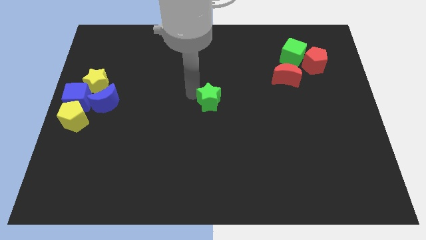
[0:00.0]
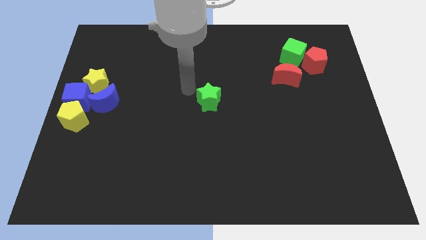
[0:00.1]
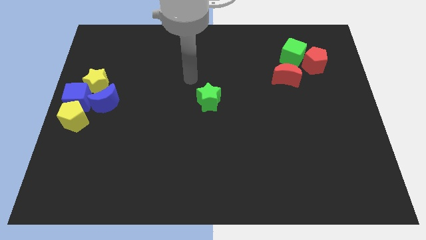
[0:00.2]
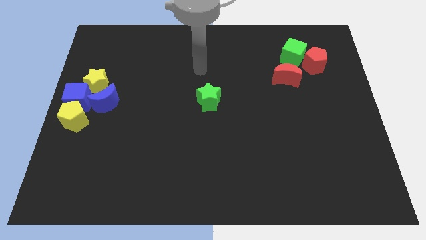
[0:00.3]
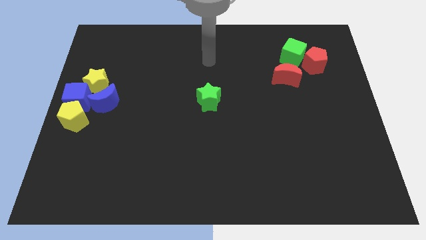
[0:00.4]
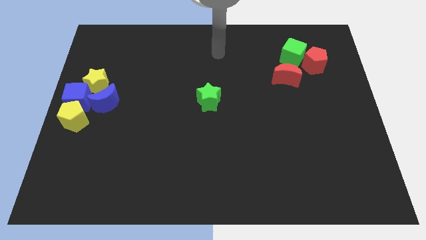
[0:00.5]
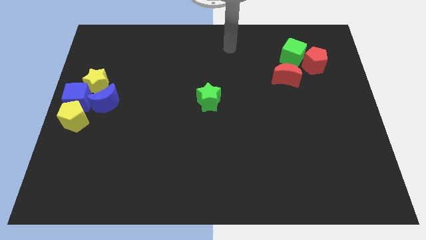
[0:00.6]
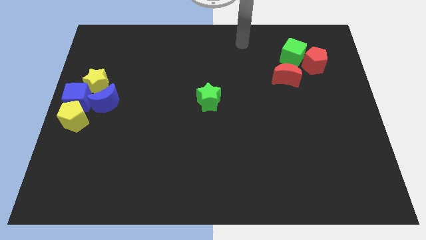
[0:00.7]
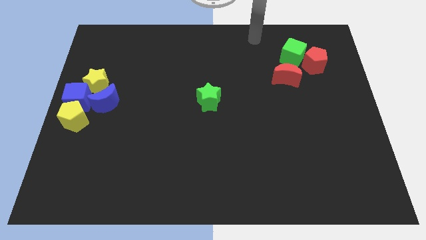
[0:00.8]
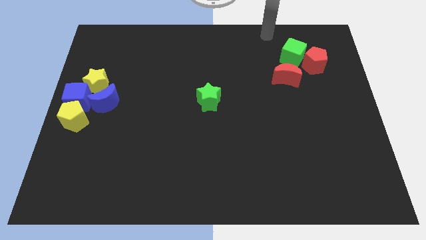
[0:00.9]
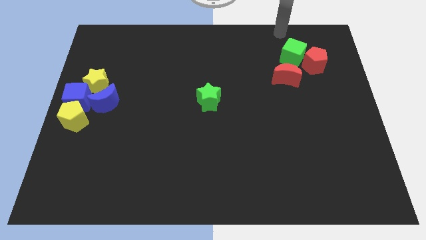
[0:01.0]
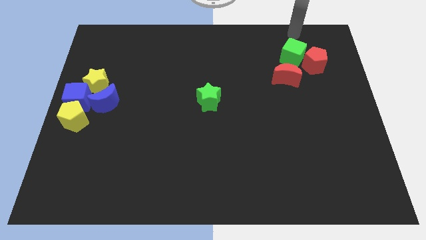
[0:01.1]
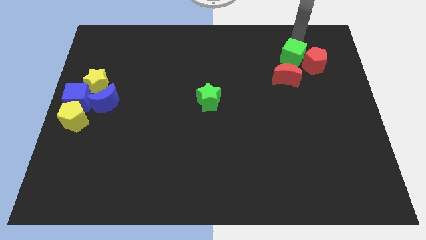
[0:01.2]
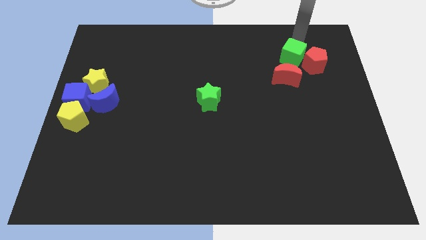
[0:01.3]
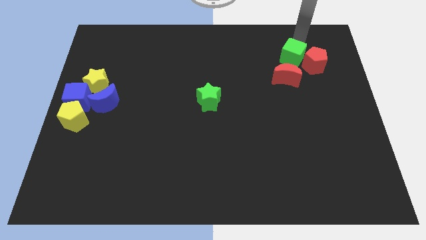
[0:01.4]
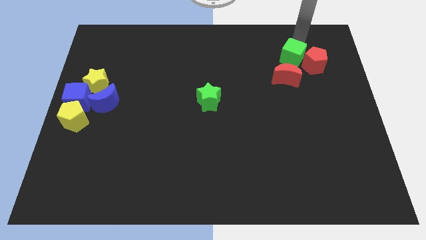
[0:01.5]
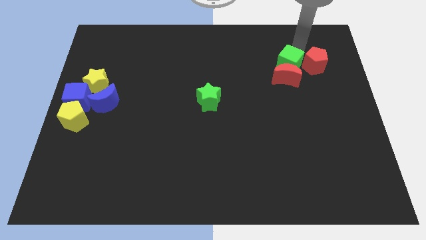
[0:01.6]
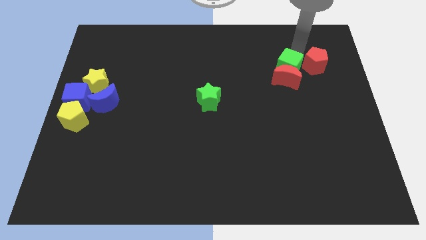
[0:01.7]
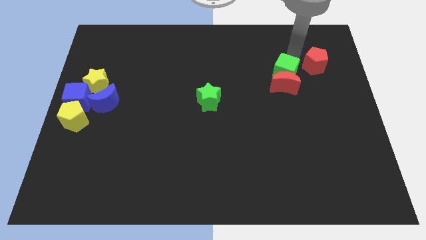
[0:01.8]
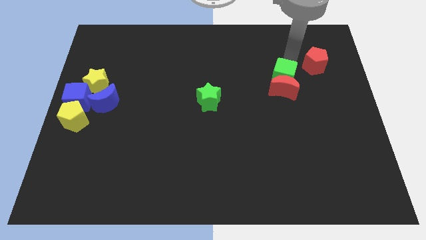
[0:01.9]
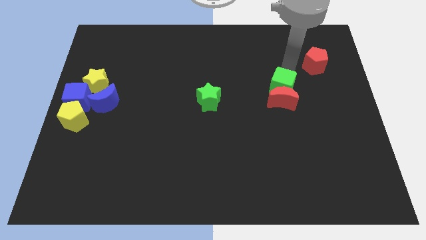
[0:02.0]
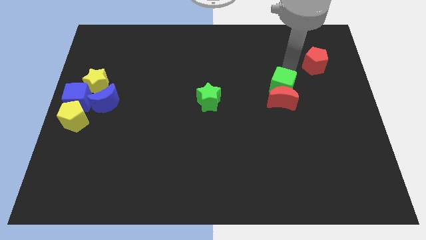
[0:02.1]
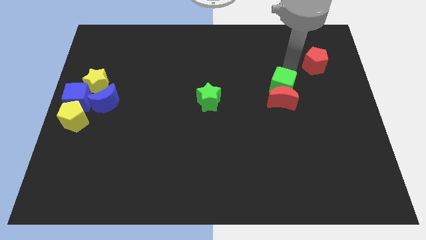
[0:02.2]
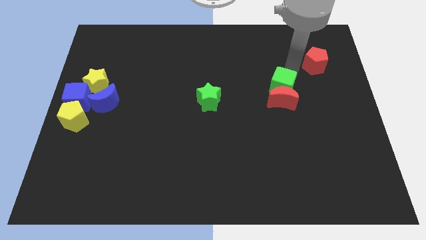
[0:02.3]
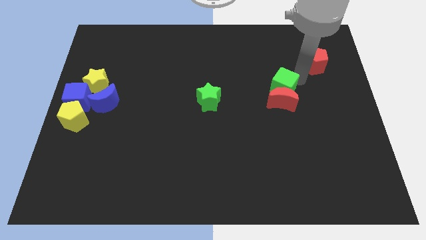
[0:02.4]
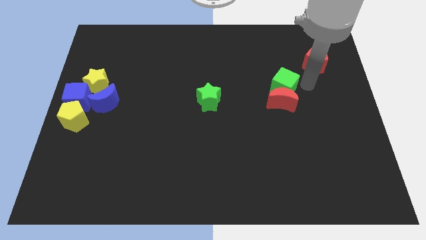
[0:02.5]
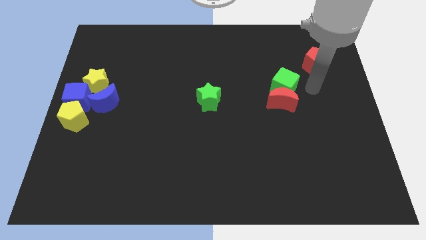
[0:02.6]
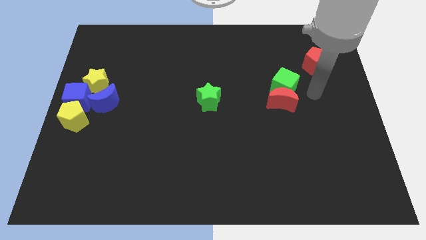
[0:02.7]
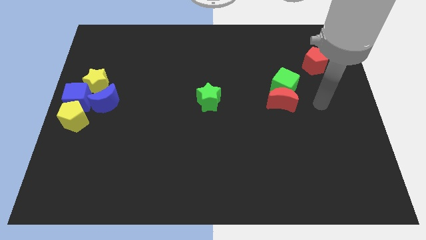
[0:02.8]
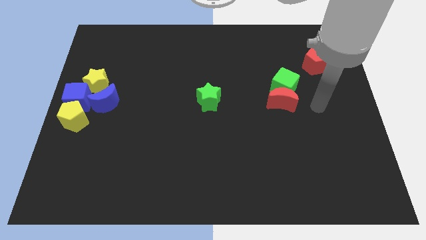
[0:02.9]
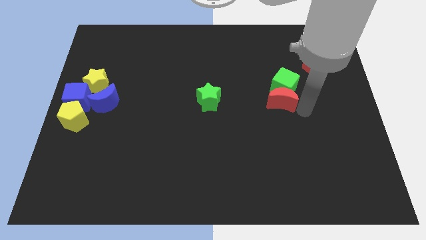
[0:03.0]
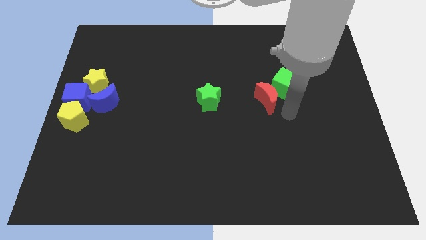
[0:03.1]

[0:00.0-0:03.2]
push the green cube and red moon towards the bottom side of the board

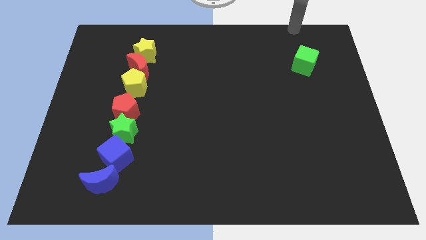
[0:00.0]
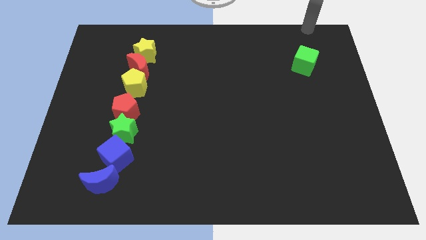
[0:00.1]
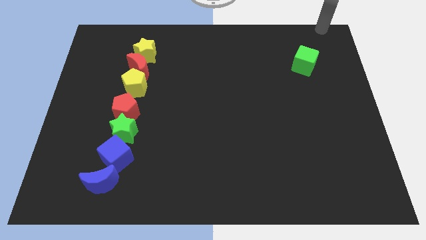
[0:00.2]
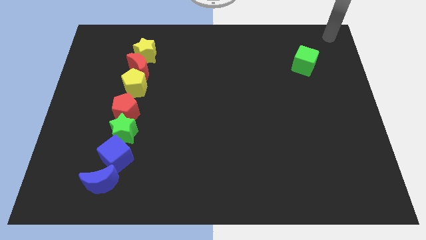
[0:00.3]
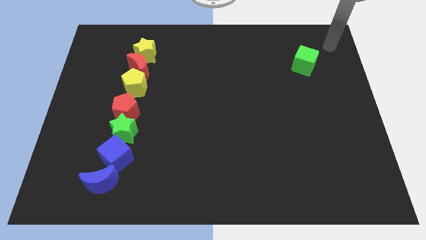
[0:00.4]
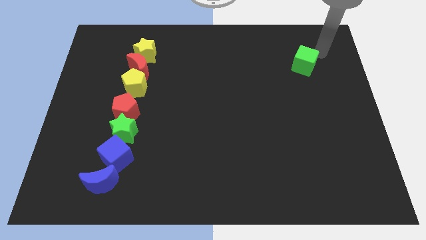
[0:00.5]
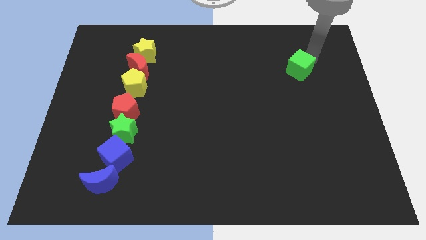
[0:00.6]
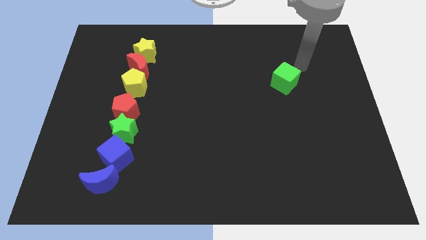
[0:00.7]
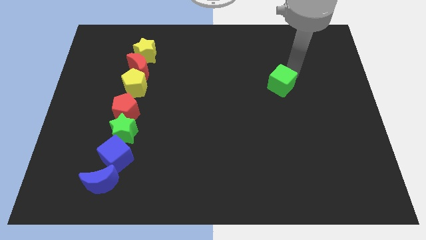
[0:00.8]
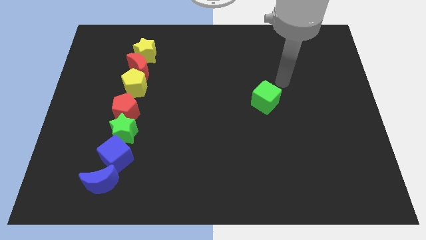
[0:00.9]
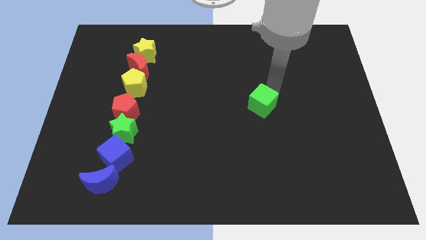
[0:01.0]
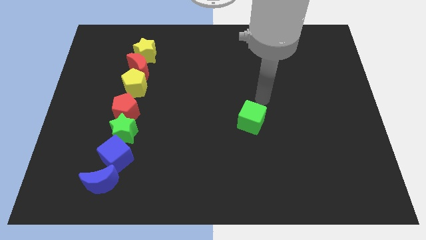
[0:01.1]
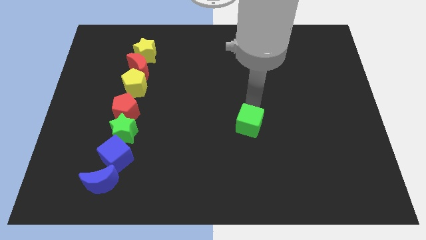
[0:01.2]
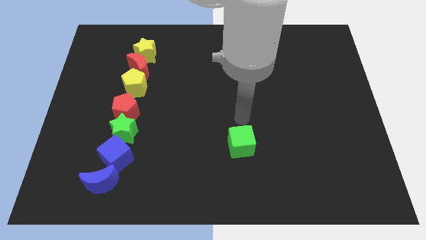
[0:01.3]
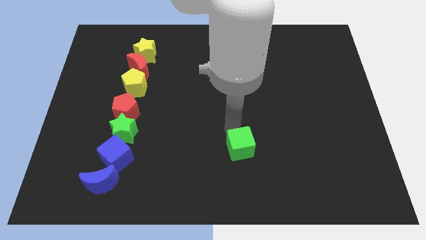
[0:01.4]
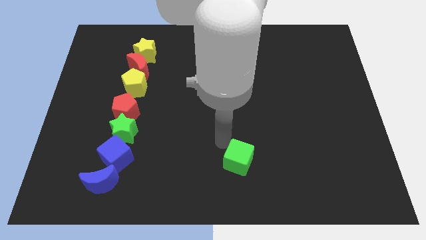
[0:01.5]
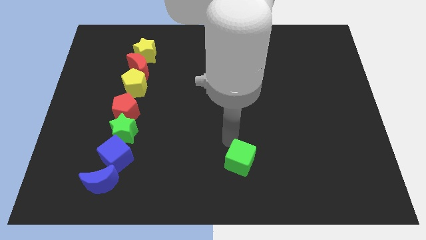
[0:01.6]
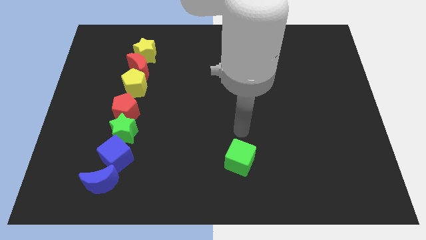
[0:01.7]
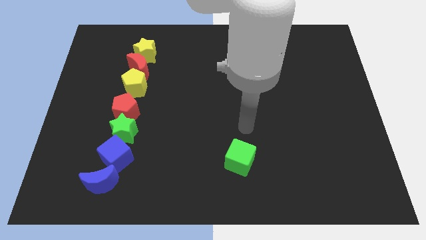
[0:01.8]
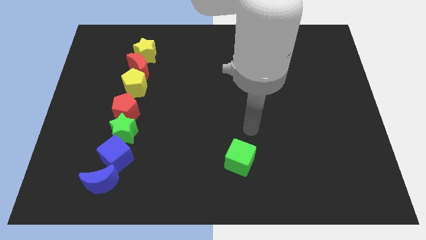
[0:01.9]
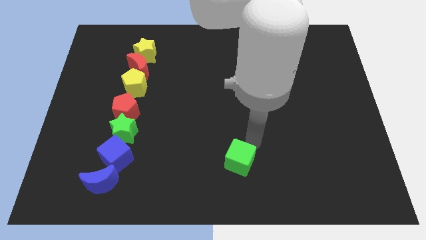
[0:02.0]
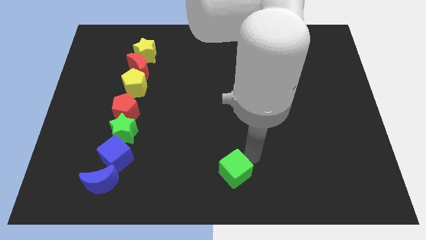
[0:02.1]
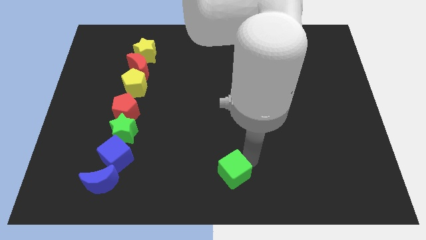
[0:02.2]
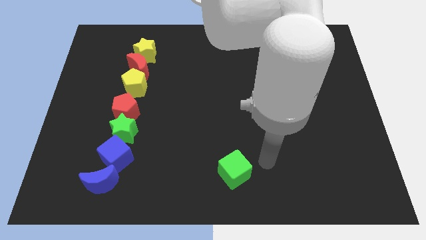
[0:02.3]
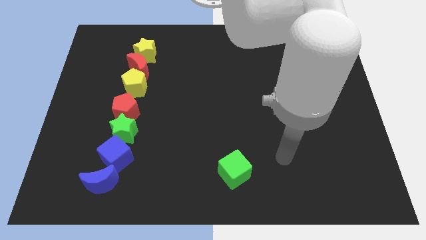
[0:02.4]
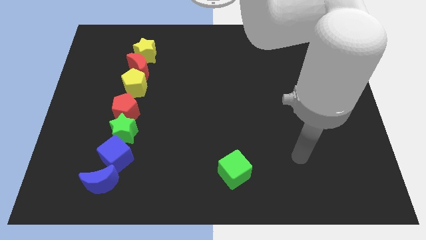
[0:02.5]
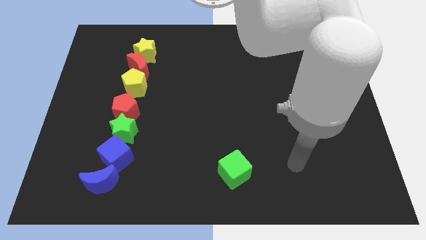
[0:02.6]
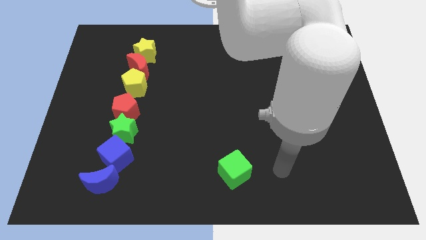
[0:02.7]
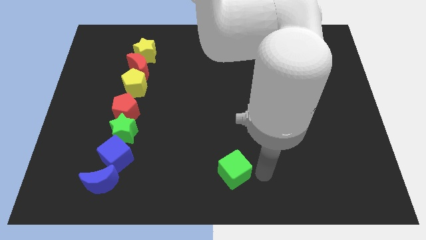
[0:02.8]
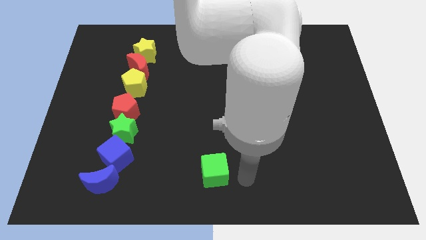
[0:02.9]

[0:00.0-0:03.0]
push the green cube to the right of the blue crescent

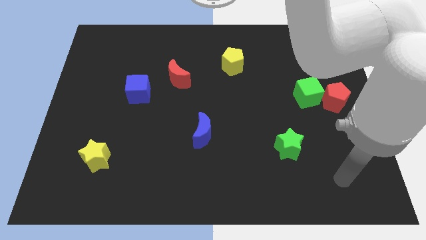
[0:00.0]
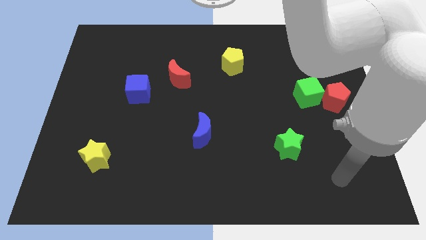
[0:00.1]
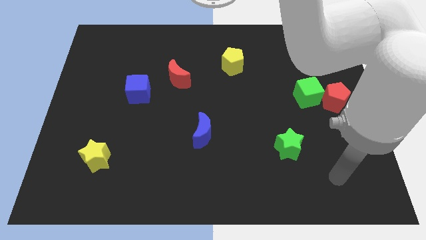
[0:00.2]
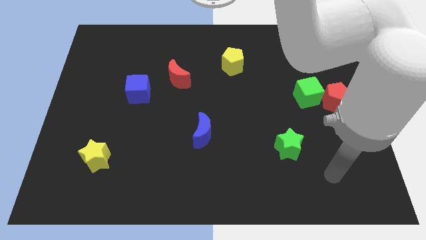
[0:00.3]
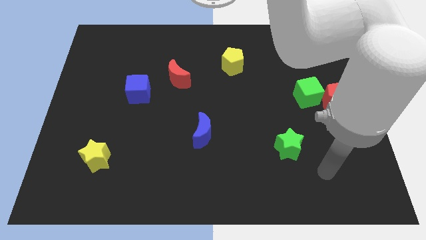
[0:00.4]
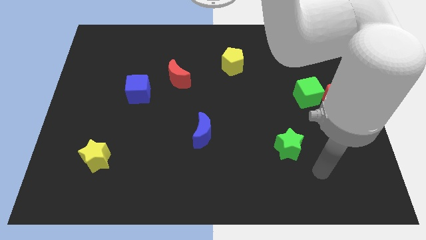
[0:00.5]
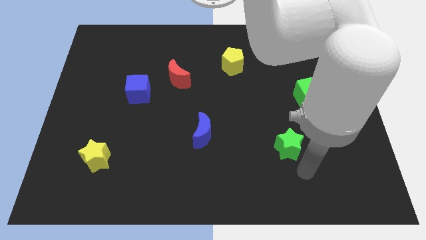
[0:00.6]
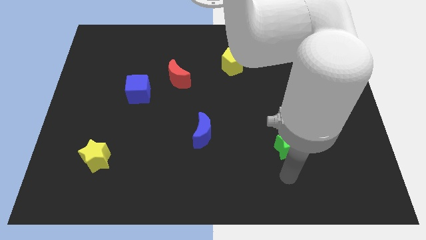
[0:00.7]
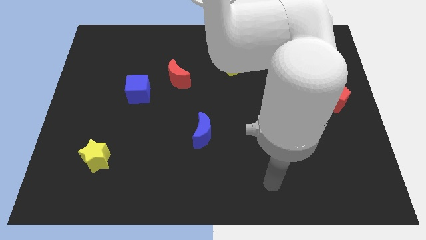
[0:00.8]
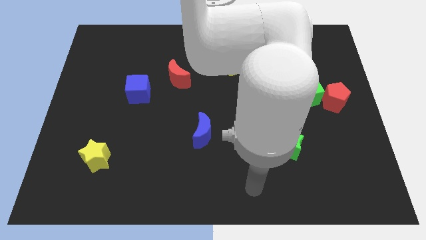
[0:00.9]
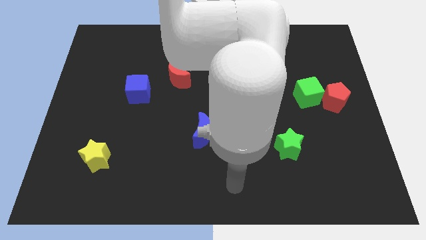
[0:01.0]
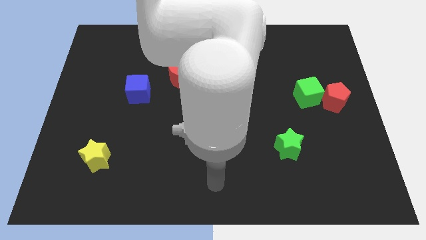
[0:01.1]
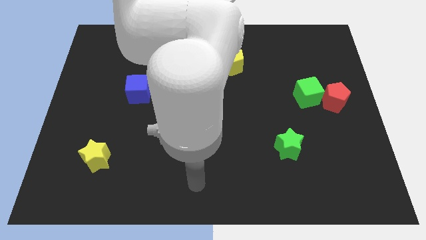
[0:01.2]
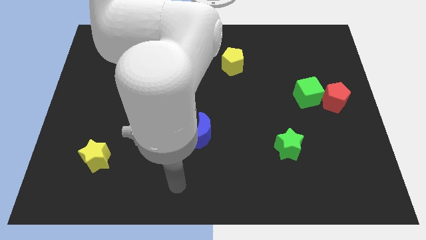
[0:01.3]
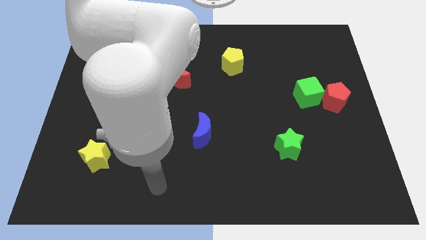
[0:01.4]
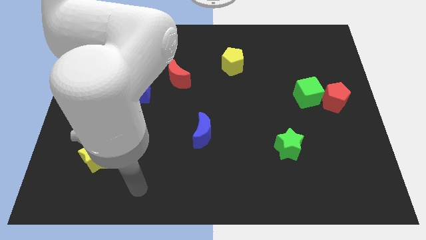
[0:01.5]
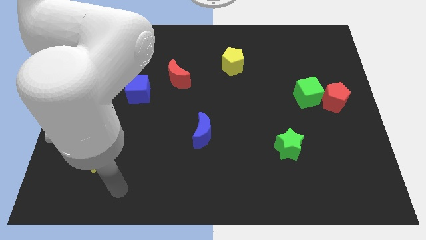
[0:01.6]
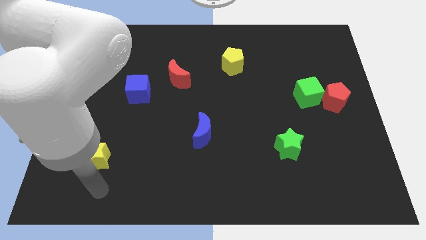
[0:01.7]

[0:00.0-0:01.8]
move your arm towards the left side of the board

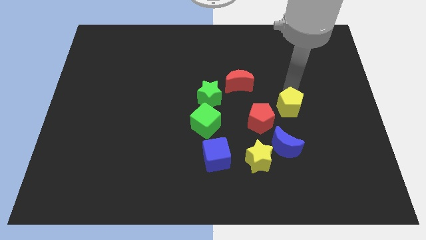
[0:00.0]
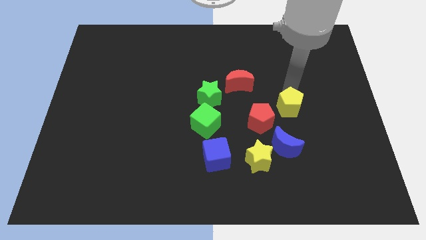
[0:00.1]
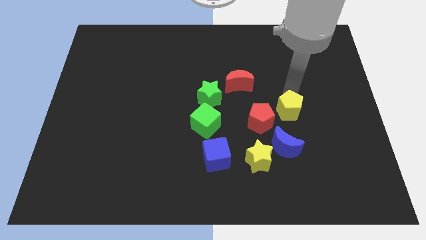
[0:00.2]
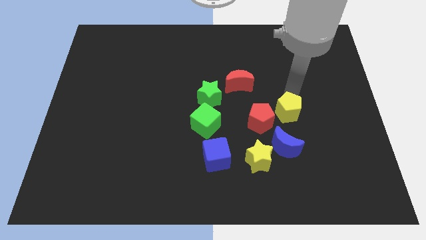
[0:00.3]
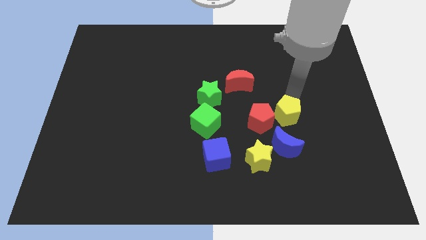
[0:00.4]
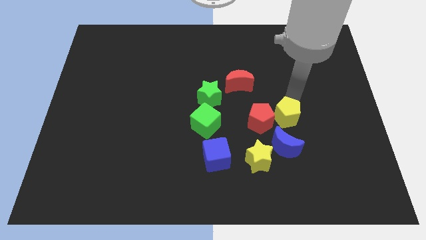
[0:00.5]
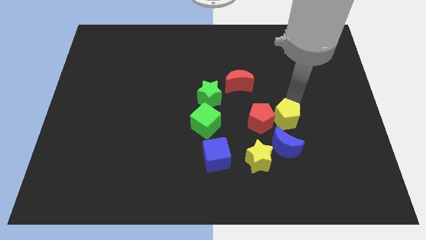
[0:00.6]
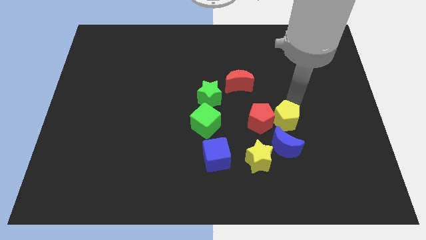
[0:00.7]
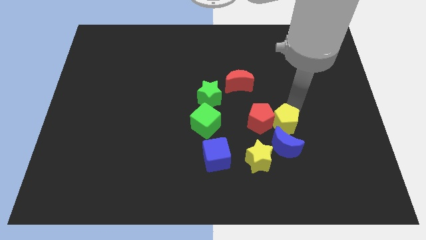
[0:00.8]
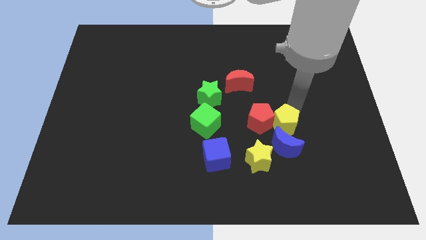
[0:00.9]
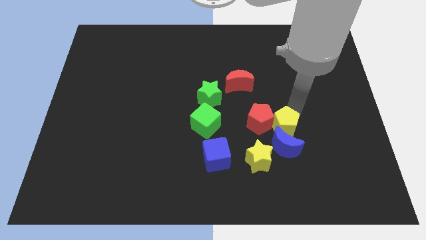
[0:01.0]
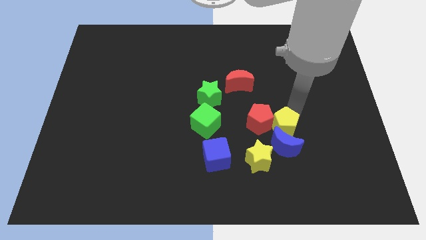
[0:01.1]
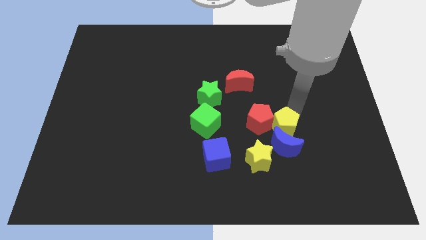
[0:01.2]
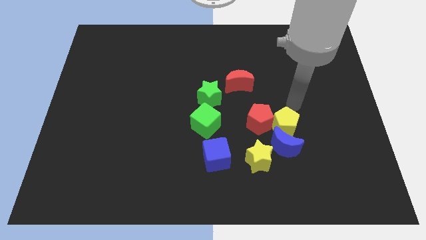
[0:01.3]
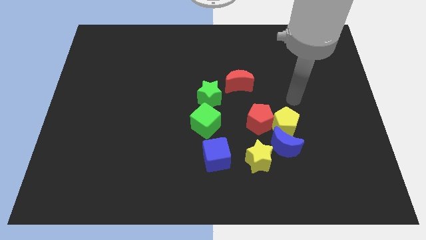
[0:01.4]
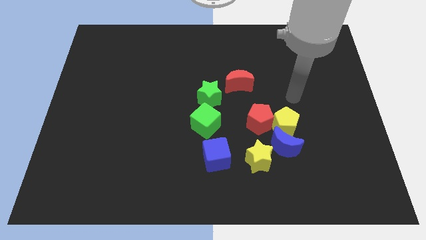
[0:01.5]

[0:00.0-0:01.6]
push the yellow pentagon into the red pentagon
